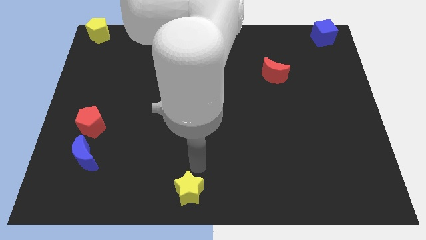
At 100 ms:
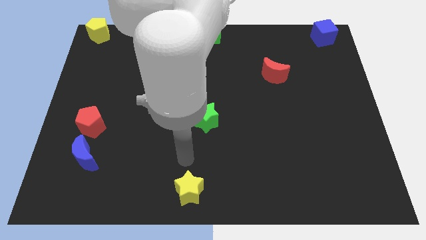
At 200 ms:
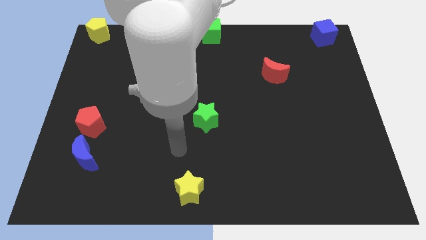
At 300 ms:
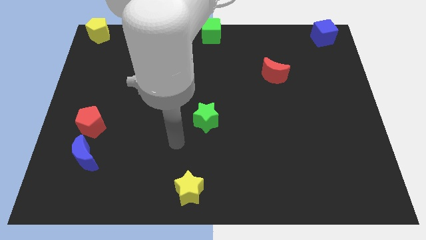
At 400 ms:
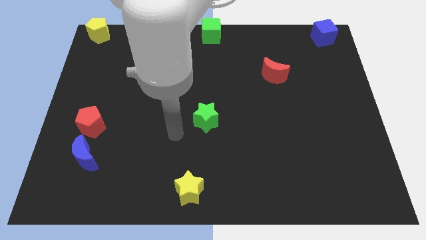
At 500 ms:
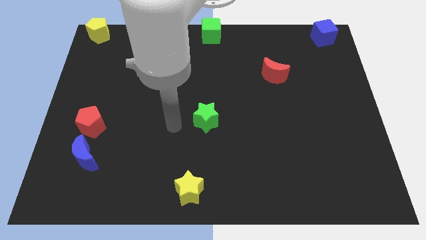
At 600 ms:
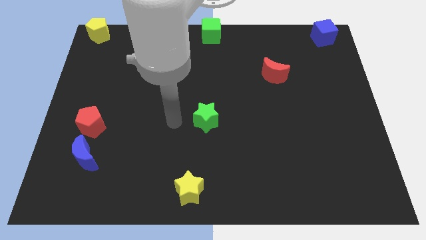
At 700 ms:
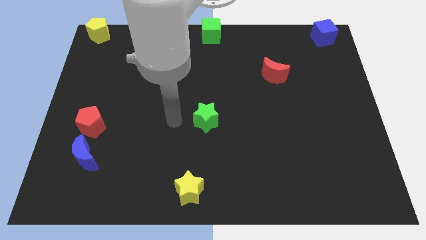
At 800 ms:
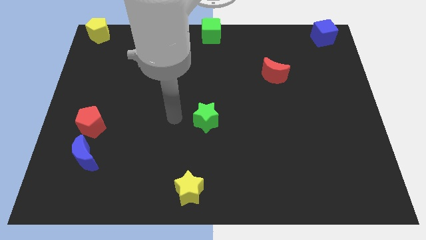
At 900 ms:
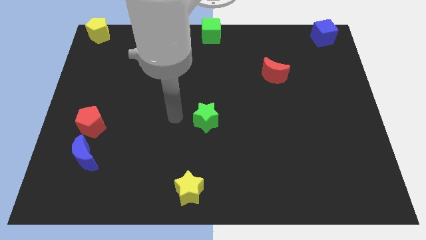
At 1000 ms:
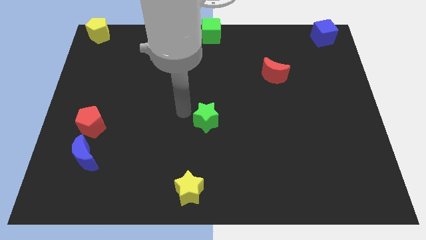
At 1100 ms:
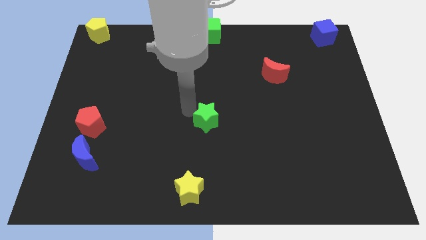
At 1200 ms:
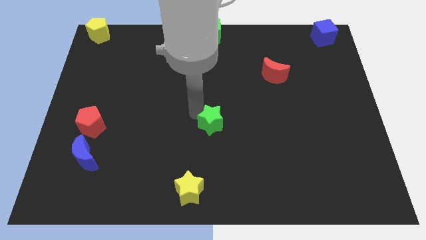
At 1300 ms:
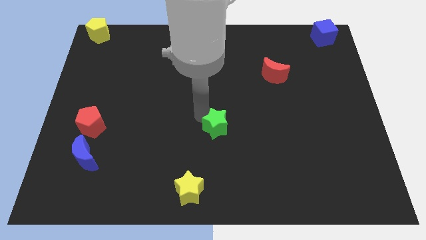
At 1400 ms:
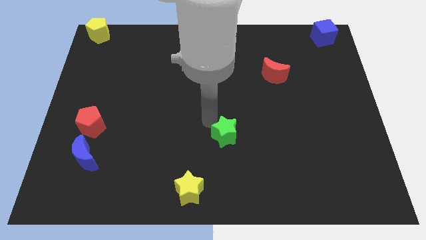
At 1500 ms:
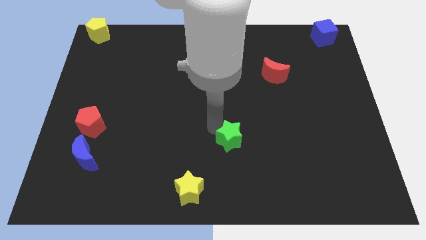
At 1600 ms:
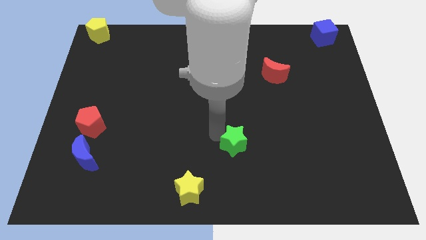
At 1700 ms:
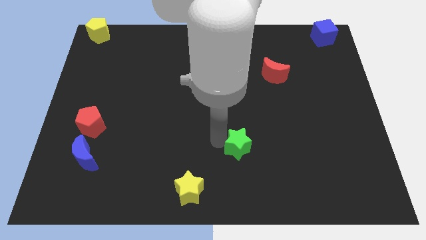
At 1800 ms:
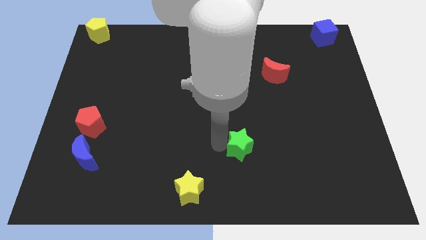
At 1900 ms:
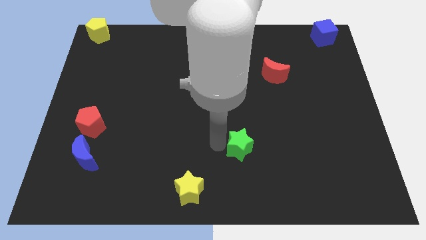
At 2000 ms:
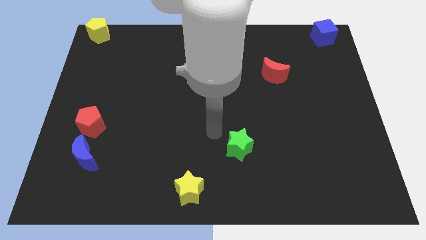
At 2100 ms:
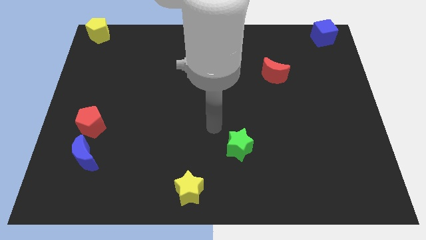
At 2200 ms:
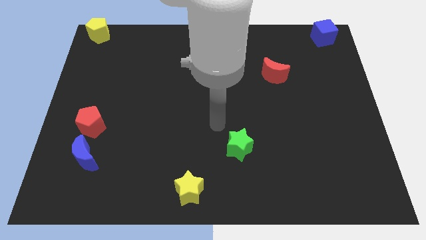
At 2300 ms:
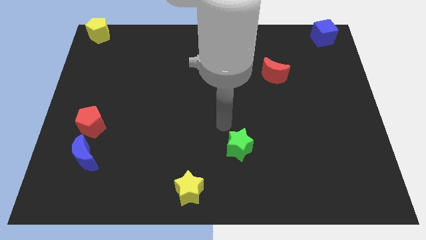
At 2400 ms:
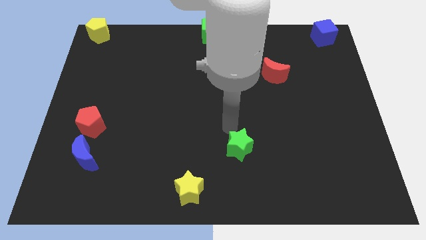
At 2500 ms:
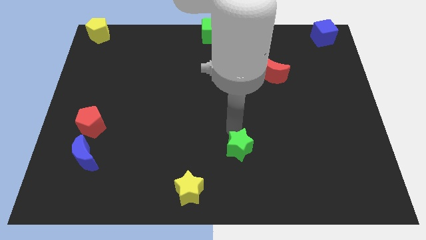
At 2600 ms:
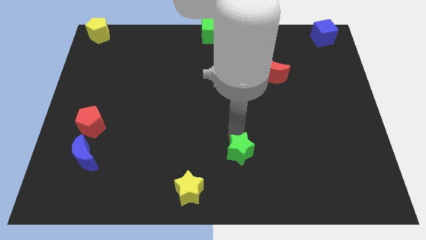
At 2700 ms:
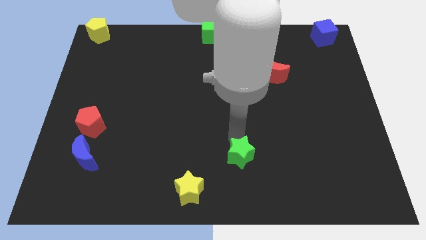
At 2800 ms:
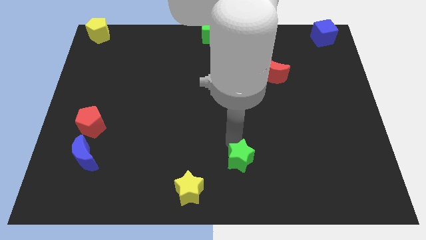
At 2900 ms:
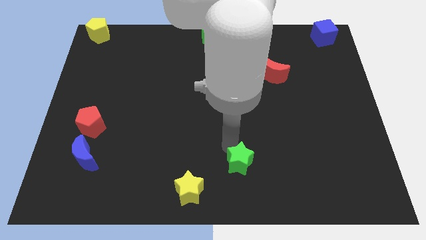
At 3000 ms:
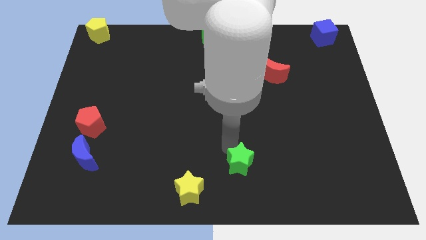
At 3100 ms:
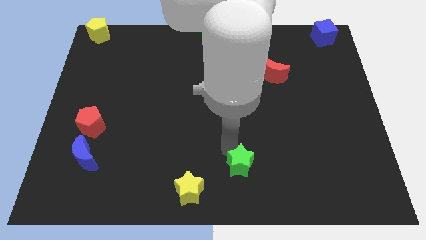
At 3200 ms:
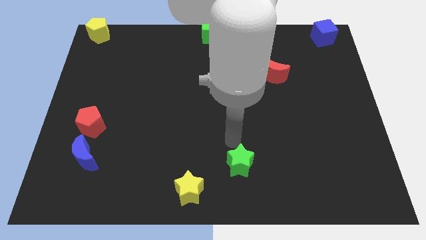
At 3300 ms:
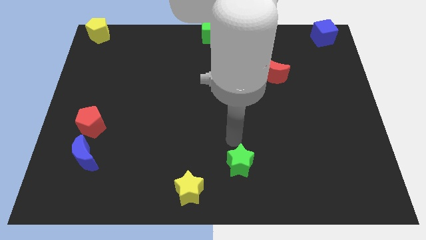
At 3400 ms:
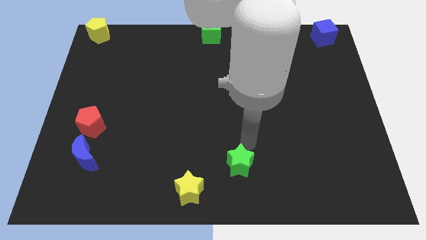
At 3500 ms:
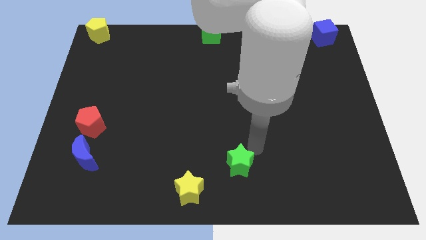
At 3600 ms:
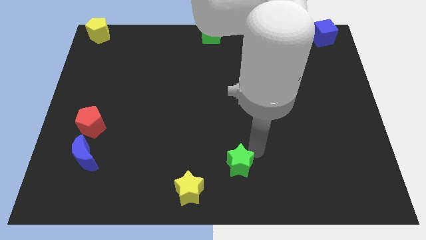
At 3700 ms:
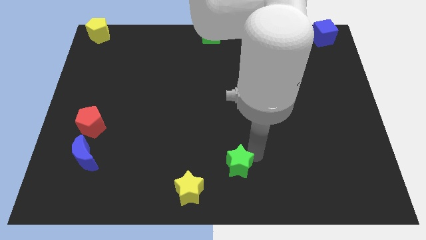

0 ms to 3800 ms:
place the green star to the top right of the yellow star

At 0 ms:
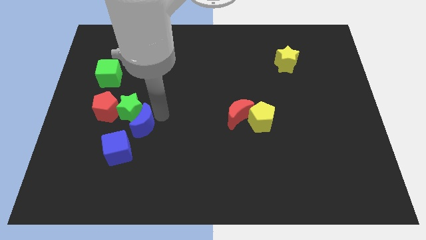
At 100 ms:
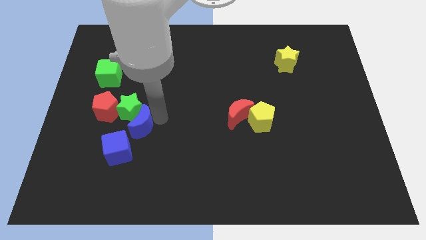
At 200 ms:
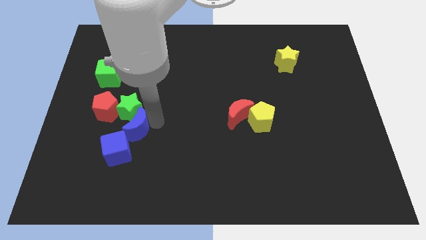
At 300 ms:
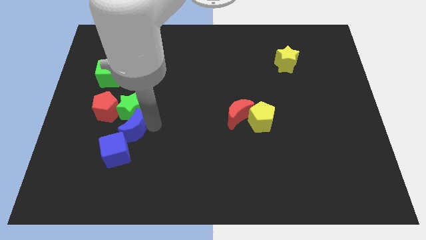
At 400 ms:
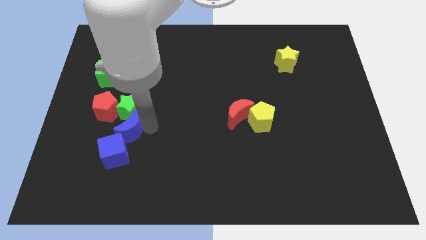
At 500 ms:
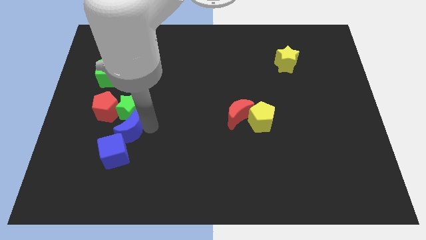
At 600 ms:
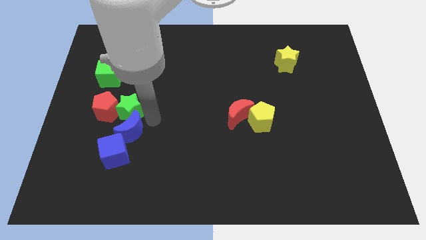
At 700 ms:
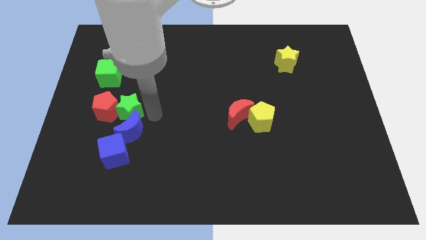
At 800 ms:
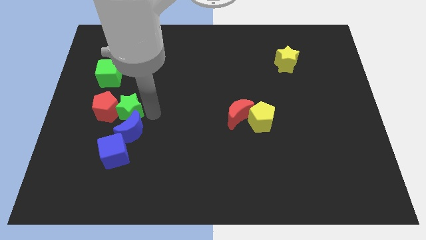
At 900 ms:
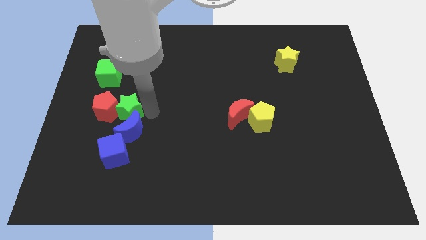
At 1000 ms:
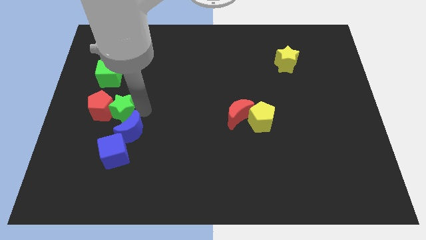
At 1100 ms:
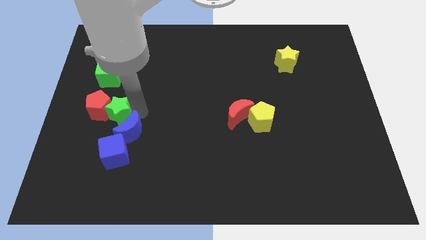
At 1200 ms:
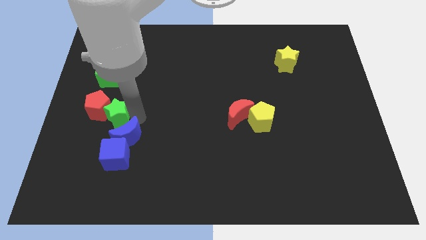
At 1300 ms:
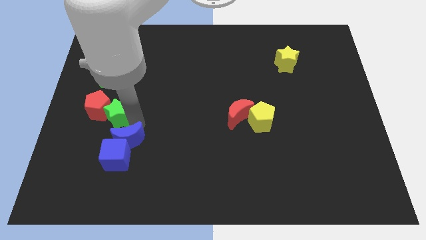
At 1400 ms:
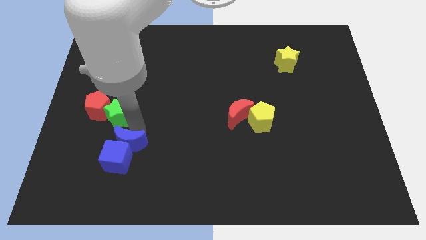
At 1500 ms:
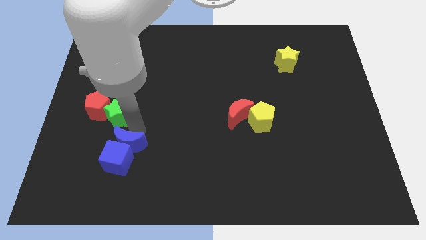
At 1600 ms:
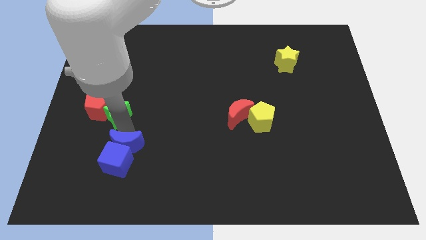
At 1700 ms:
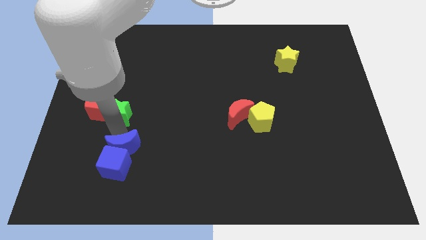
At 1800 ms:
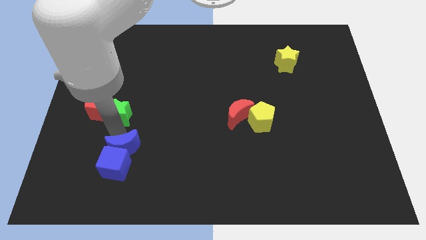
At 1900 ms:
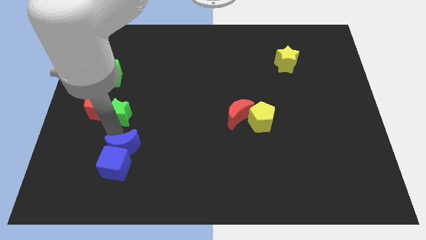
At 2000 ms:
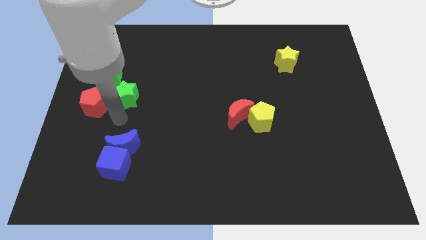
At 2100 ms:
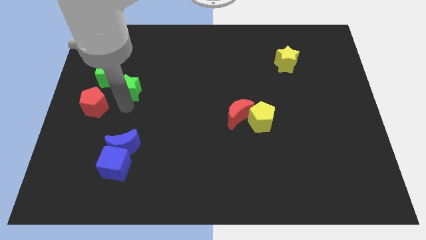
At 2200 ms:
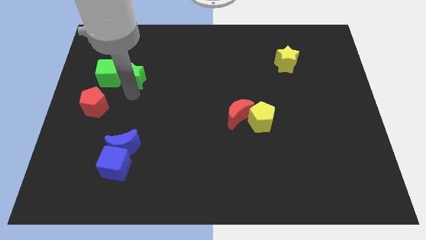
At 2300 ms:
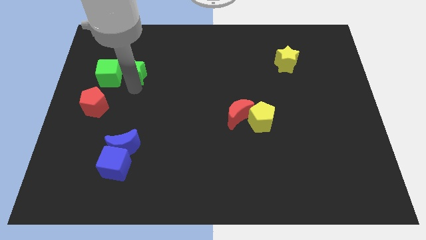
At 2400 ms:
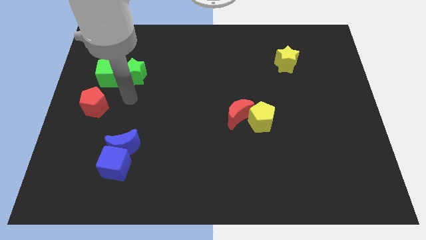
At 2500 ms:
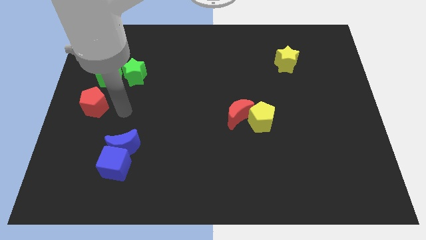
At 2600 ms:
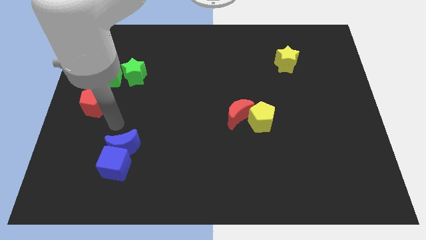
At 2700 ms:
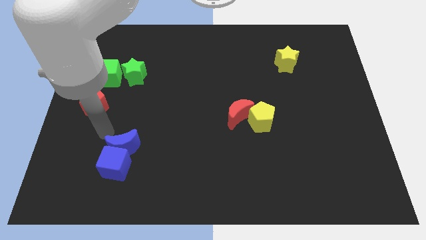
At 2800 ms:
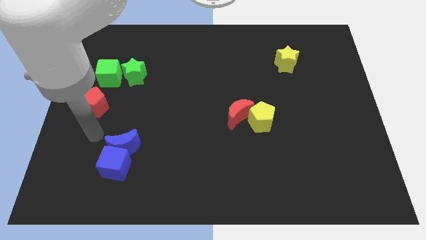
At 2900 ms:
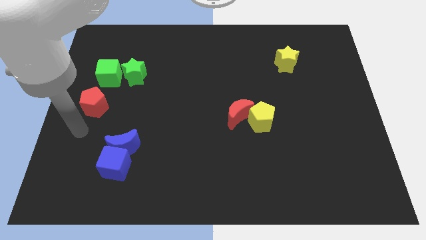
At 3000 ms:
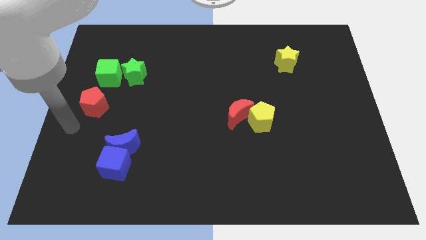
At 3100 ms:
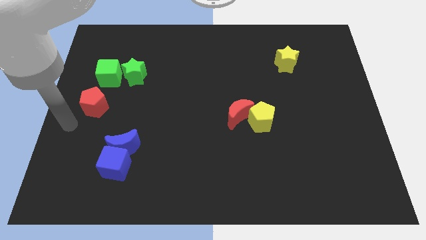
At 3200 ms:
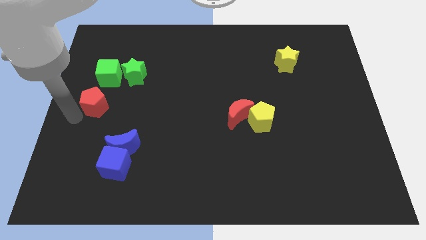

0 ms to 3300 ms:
separate green star from blue crescent

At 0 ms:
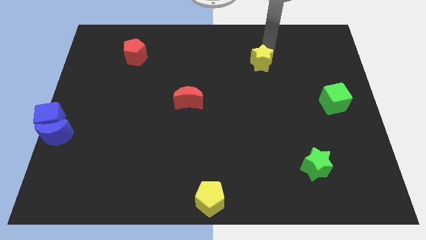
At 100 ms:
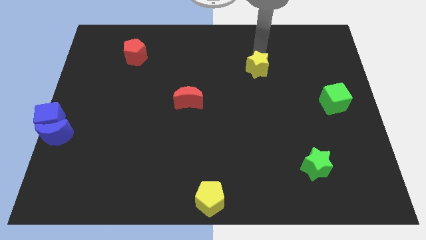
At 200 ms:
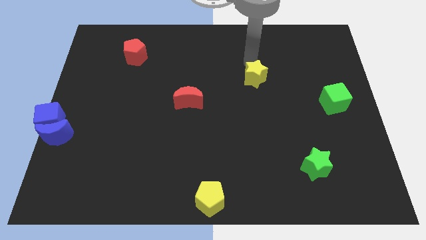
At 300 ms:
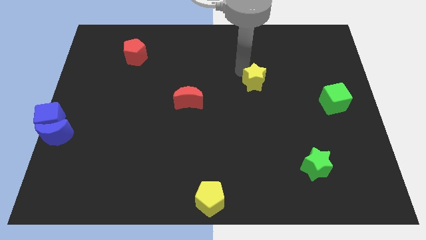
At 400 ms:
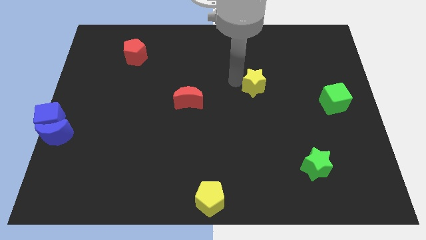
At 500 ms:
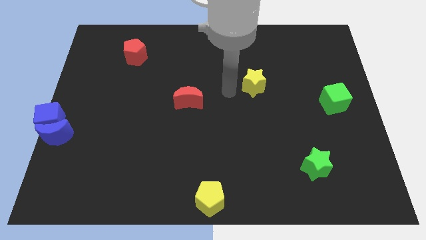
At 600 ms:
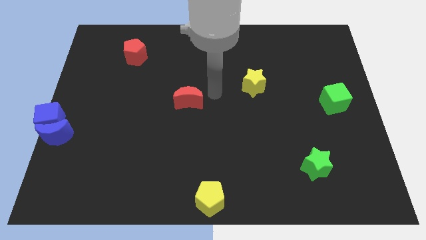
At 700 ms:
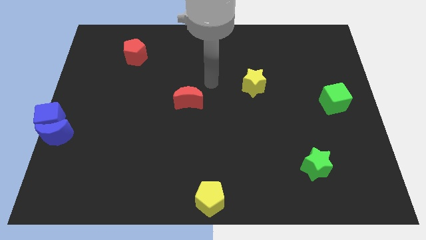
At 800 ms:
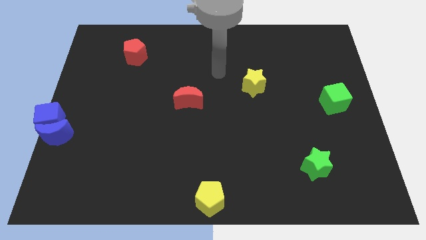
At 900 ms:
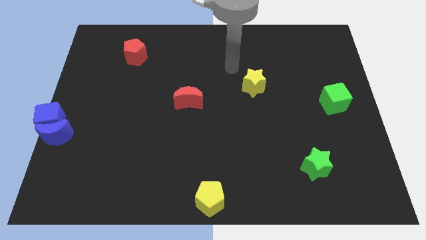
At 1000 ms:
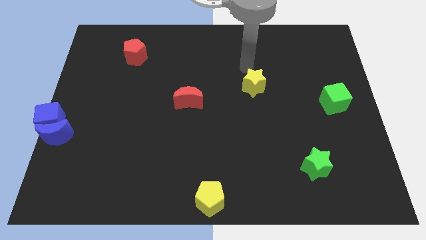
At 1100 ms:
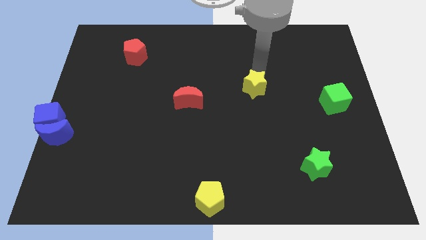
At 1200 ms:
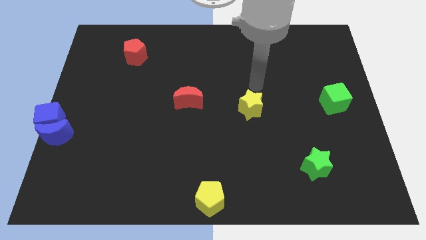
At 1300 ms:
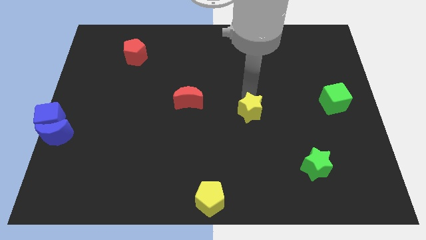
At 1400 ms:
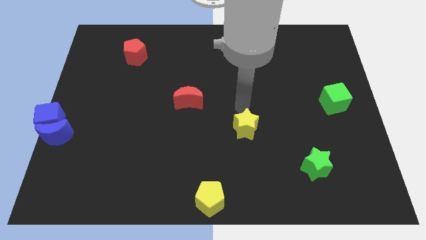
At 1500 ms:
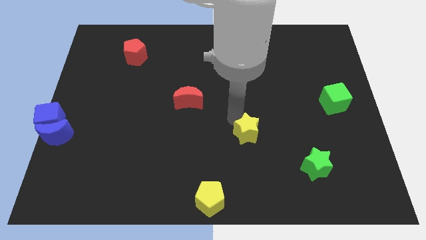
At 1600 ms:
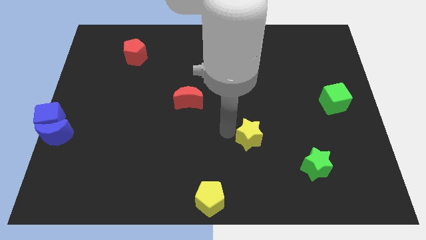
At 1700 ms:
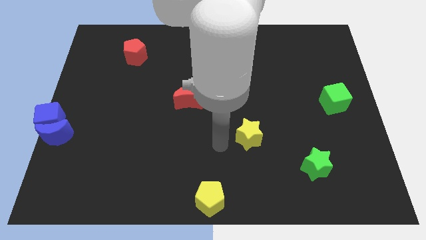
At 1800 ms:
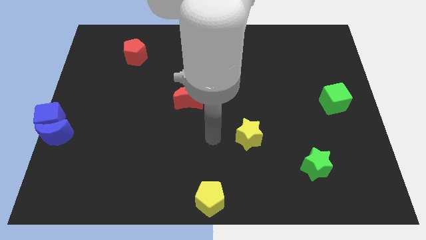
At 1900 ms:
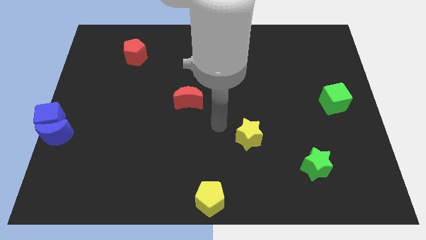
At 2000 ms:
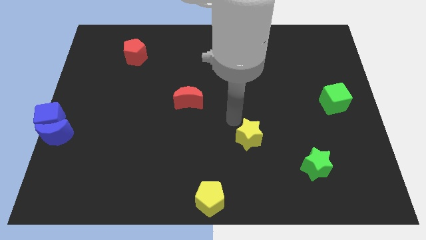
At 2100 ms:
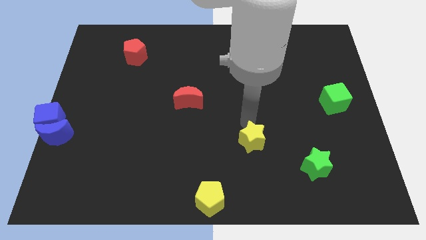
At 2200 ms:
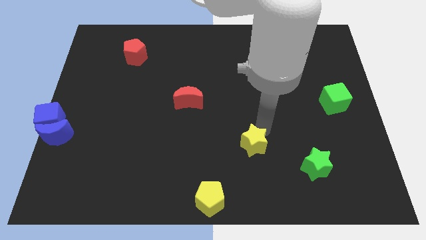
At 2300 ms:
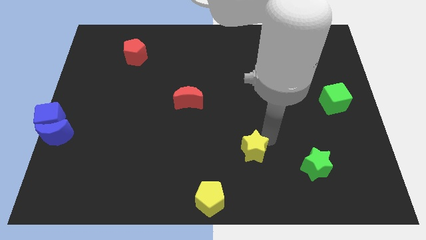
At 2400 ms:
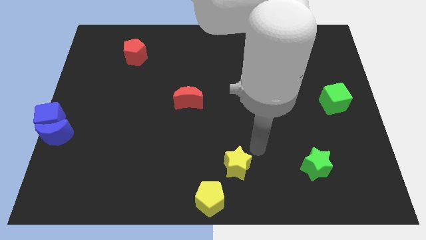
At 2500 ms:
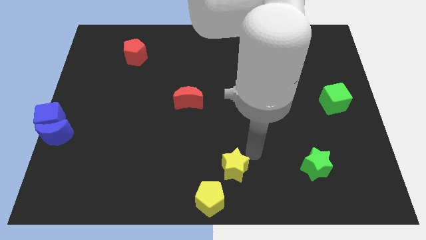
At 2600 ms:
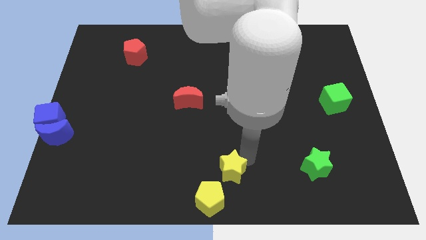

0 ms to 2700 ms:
place the yellow star beside the green star
